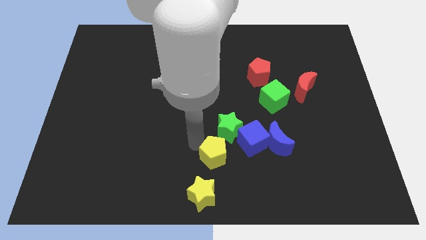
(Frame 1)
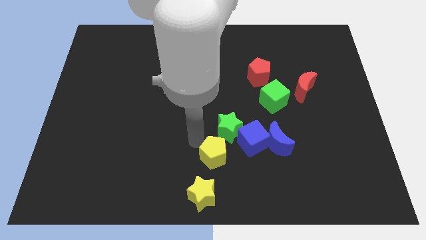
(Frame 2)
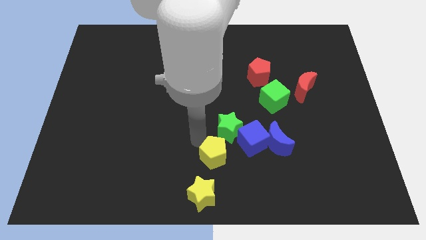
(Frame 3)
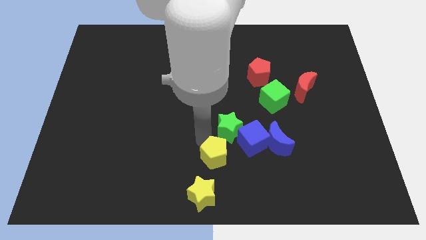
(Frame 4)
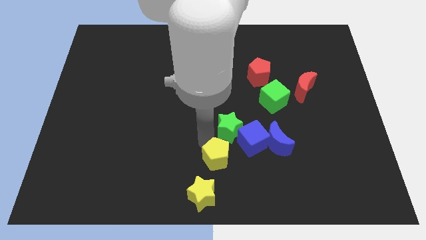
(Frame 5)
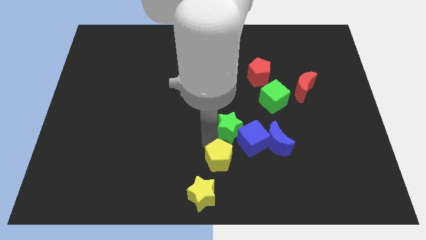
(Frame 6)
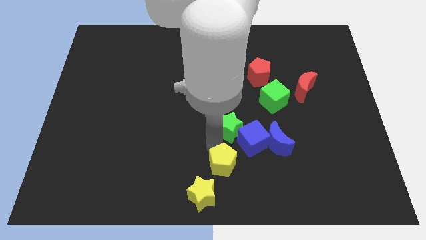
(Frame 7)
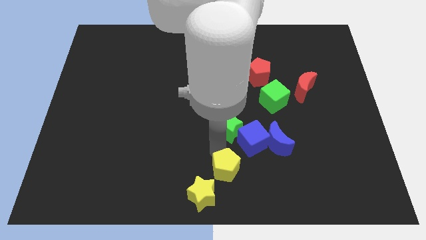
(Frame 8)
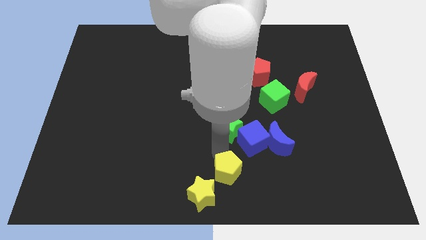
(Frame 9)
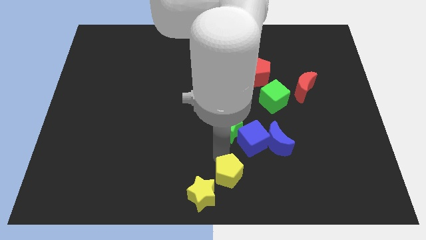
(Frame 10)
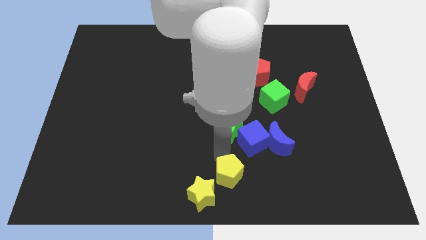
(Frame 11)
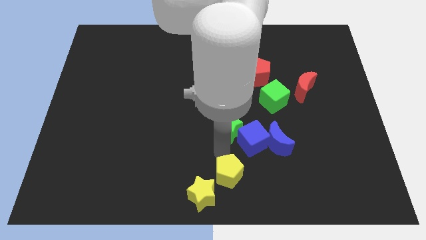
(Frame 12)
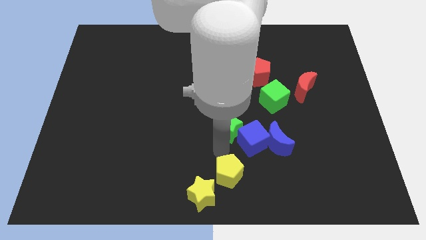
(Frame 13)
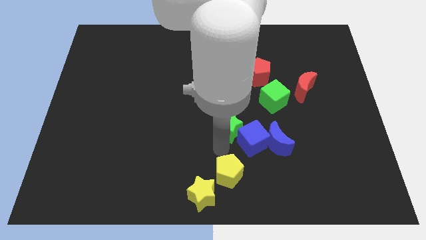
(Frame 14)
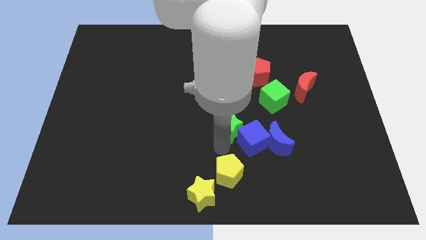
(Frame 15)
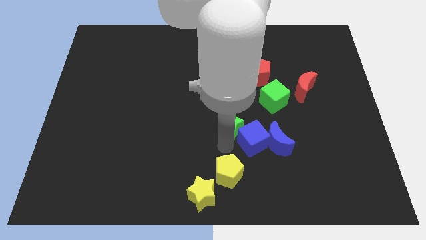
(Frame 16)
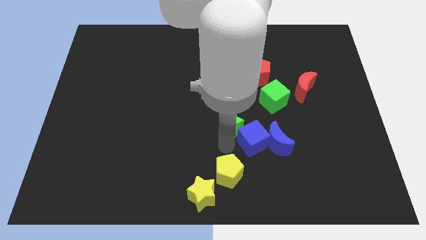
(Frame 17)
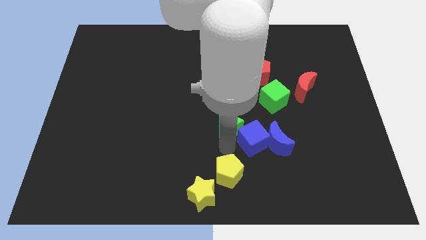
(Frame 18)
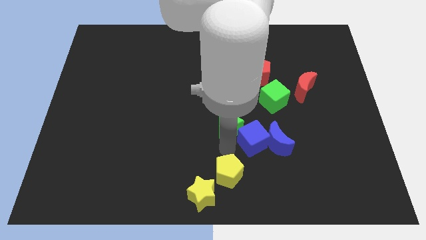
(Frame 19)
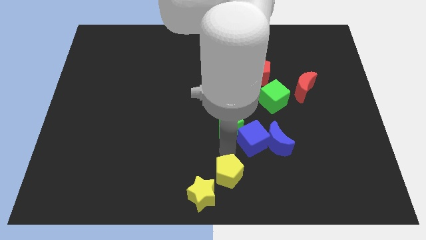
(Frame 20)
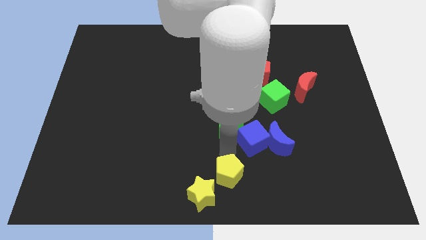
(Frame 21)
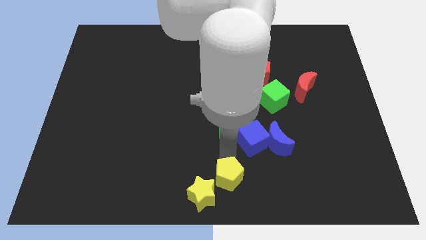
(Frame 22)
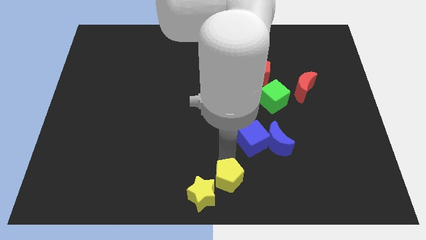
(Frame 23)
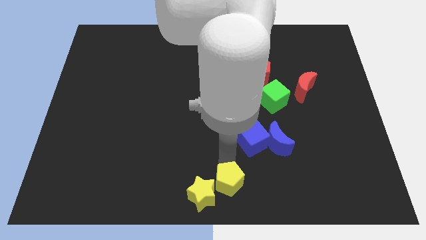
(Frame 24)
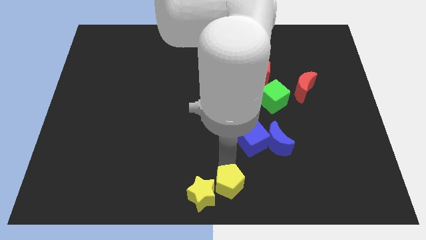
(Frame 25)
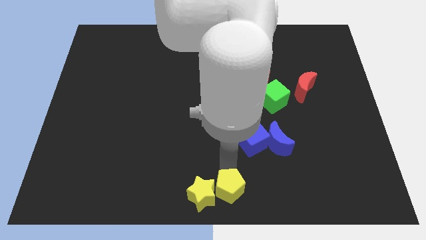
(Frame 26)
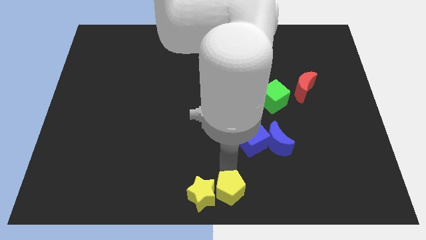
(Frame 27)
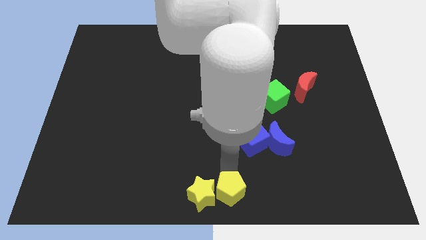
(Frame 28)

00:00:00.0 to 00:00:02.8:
place the yellow pentagon vertically below the green star

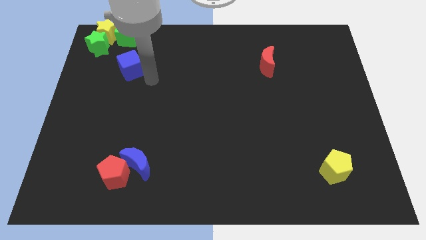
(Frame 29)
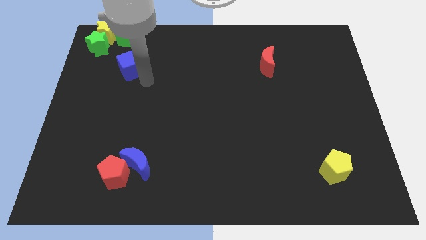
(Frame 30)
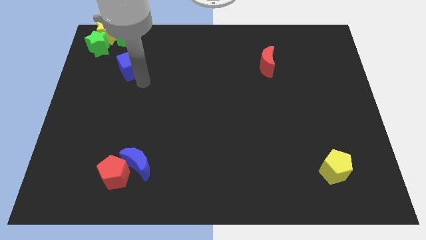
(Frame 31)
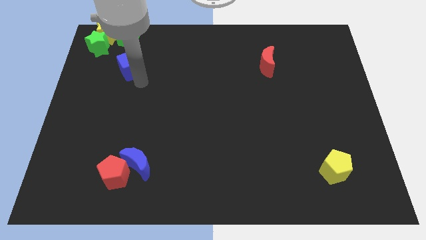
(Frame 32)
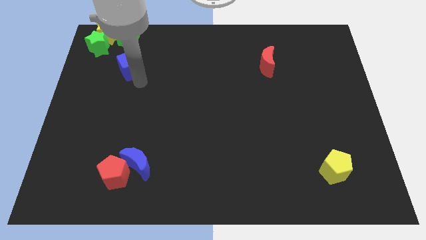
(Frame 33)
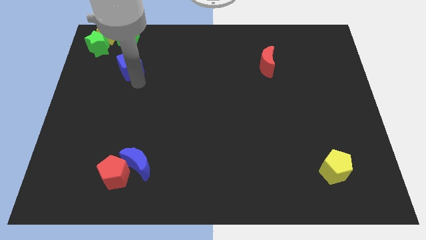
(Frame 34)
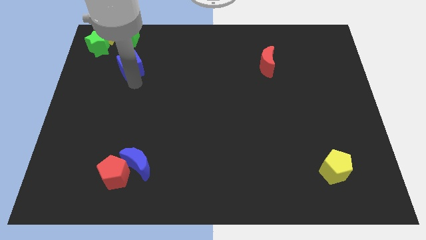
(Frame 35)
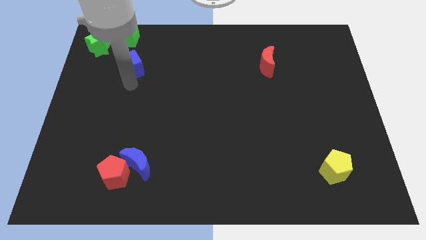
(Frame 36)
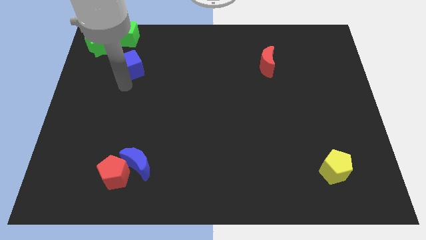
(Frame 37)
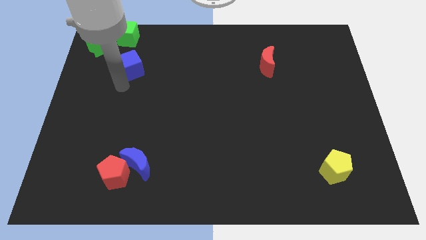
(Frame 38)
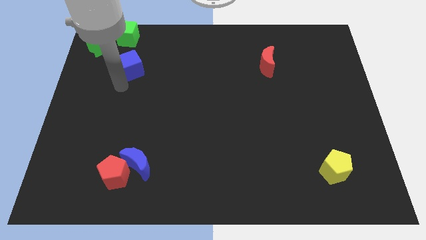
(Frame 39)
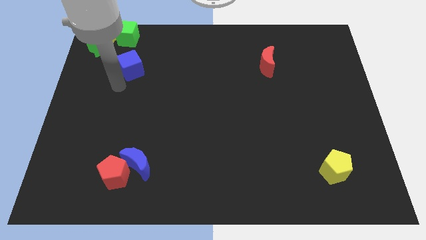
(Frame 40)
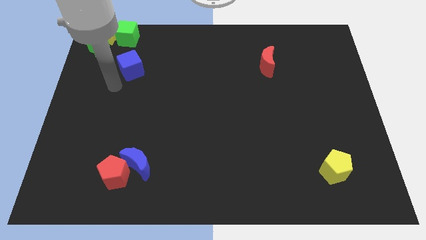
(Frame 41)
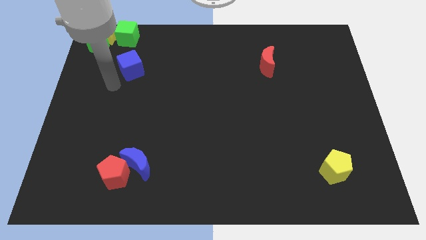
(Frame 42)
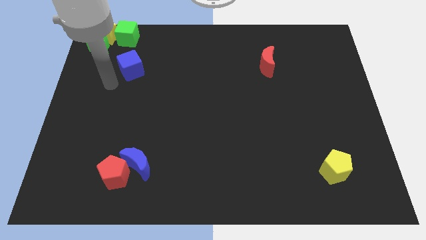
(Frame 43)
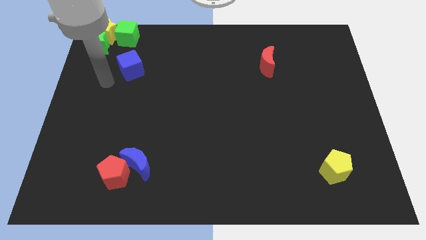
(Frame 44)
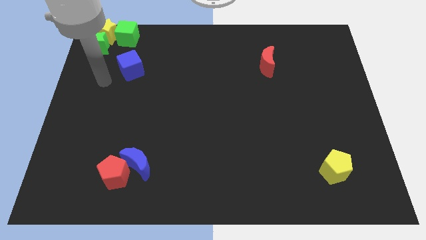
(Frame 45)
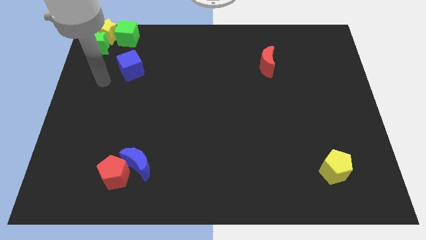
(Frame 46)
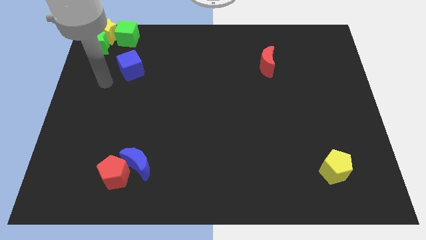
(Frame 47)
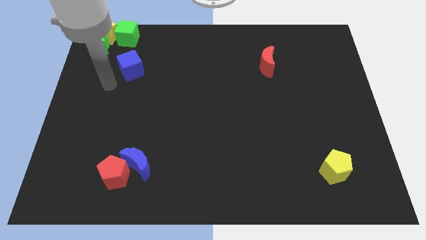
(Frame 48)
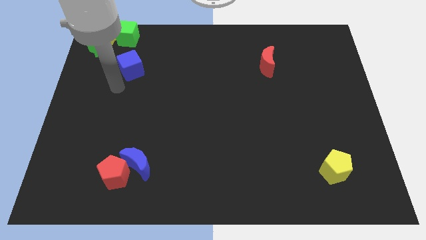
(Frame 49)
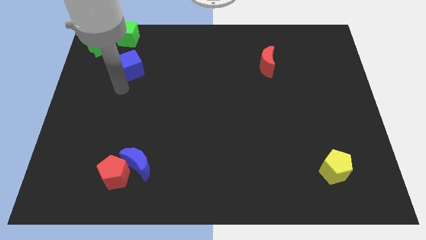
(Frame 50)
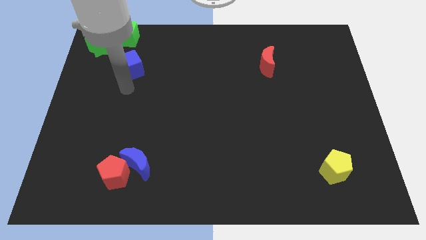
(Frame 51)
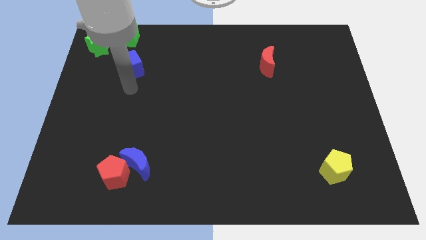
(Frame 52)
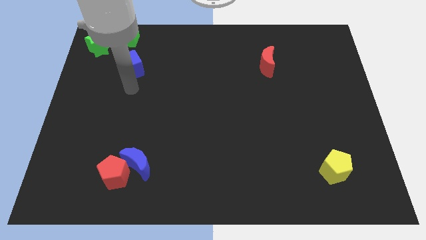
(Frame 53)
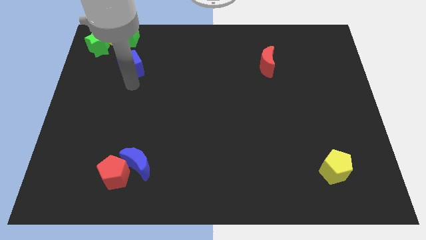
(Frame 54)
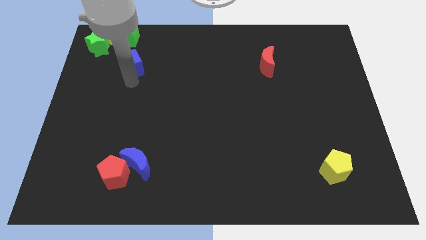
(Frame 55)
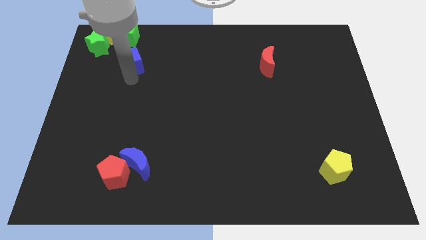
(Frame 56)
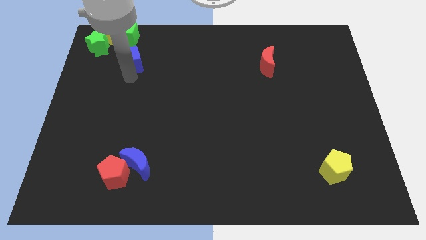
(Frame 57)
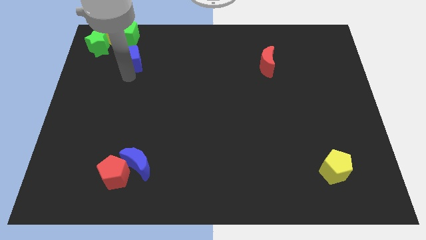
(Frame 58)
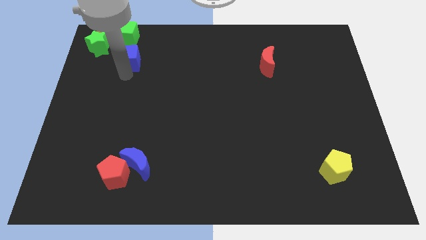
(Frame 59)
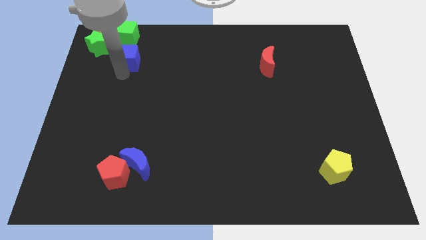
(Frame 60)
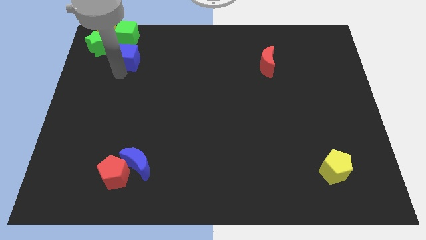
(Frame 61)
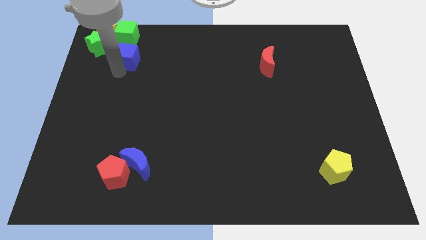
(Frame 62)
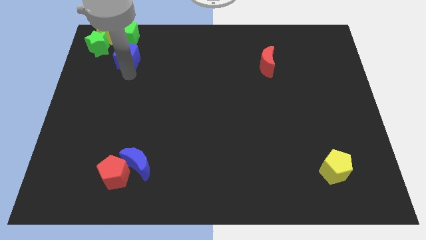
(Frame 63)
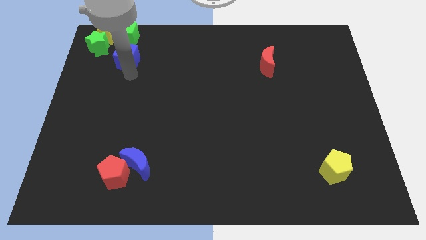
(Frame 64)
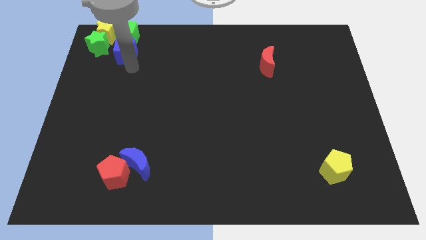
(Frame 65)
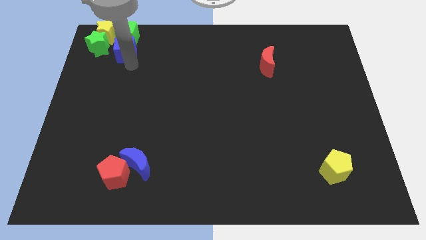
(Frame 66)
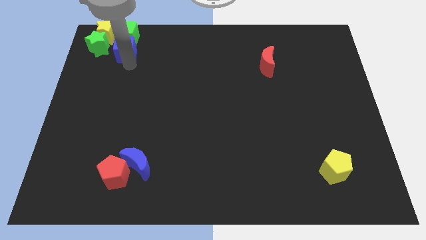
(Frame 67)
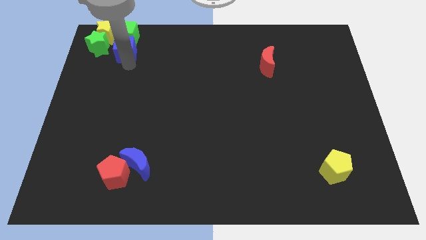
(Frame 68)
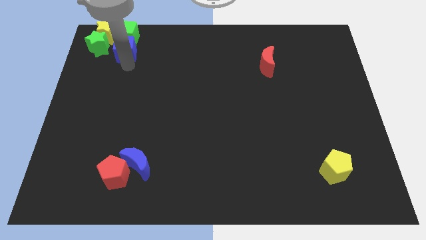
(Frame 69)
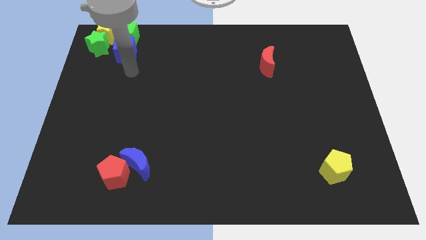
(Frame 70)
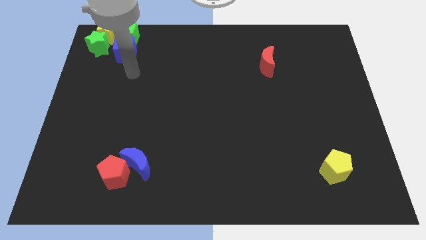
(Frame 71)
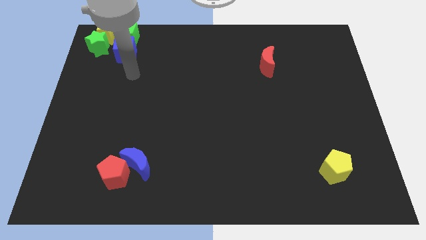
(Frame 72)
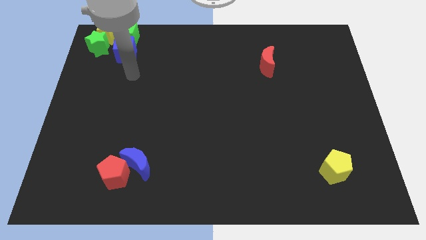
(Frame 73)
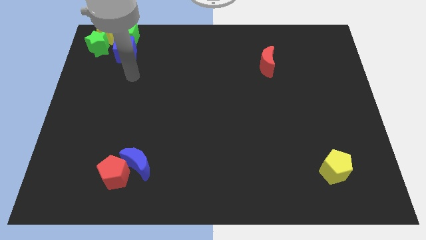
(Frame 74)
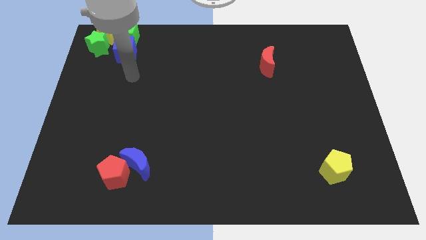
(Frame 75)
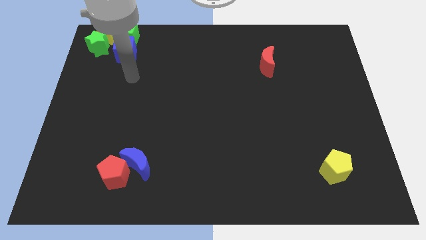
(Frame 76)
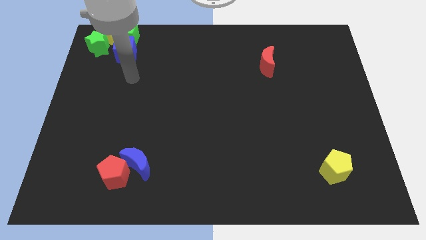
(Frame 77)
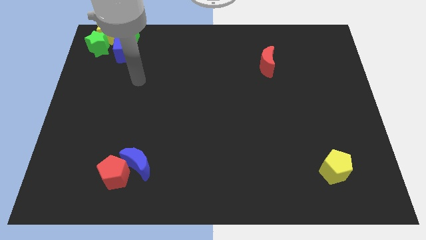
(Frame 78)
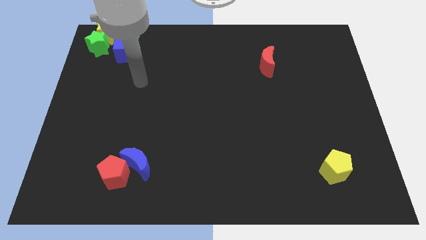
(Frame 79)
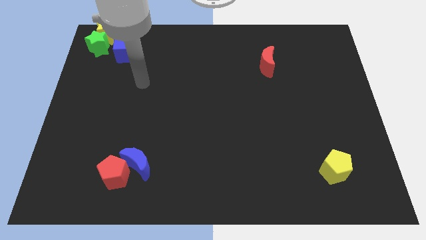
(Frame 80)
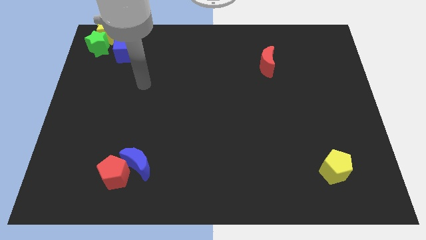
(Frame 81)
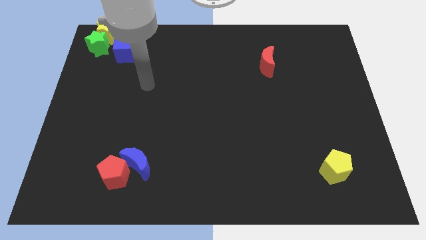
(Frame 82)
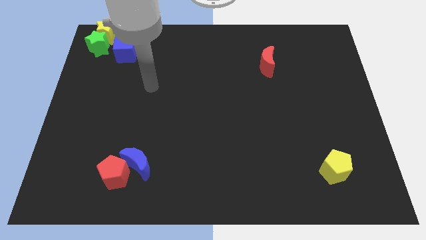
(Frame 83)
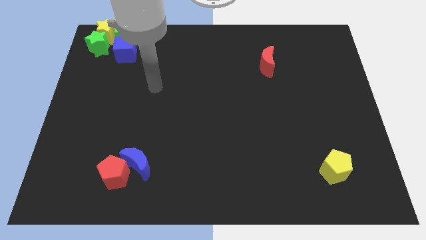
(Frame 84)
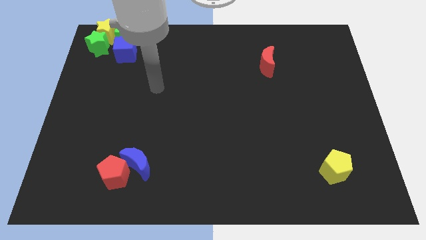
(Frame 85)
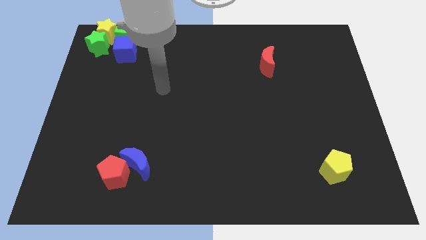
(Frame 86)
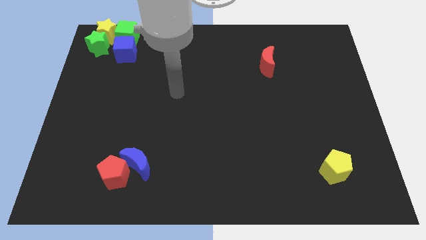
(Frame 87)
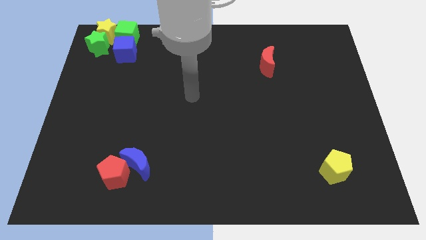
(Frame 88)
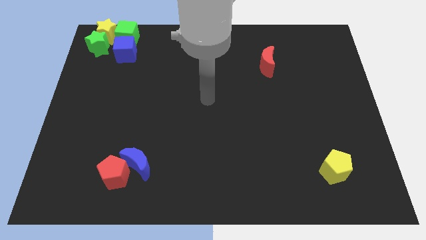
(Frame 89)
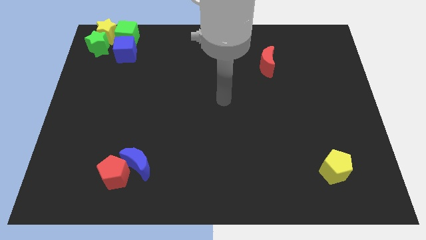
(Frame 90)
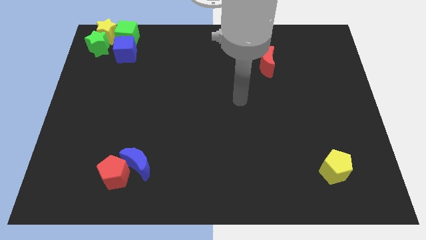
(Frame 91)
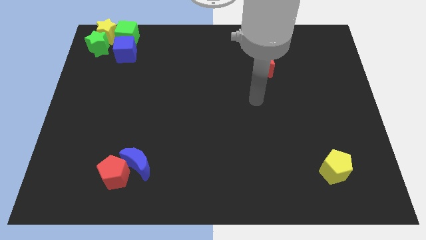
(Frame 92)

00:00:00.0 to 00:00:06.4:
place the blue cube to the right of the green star
